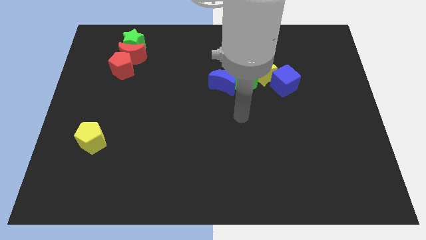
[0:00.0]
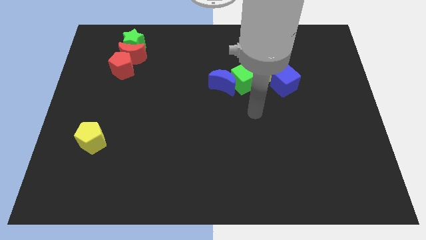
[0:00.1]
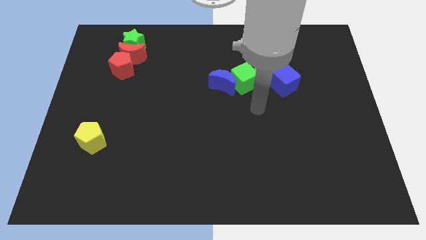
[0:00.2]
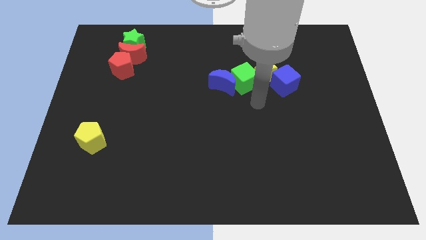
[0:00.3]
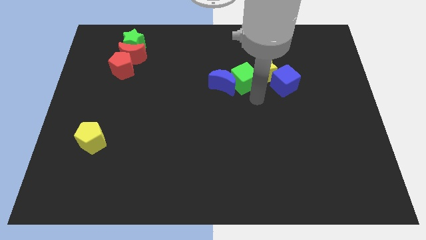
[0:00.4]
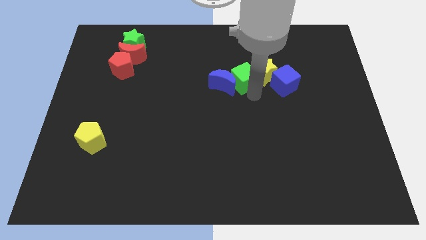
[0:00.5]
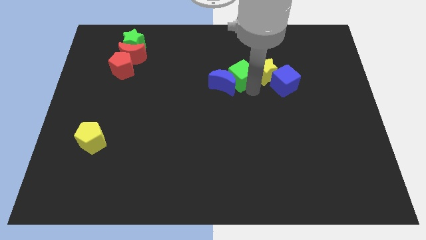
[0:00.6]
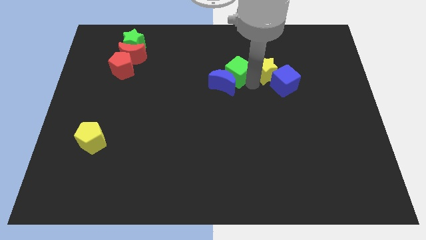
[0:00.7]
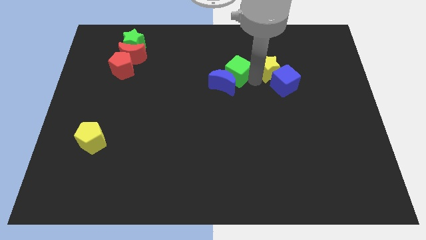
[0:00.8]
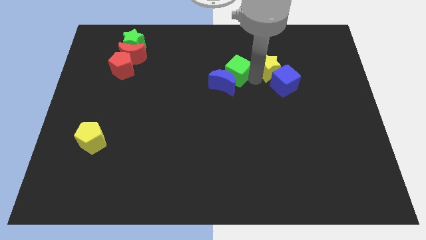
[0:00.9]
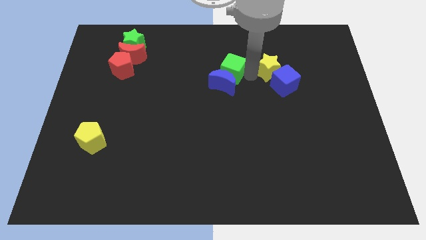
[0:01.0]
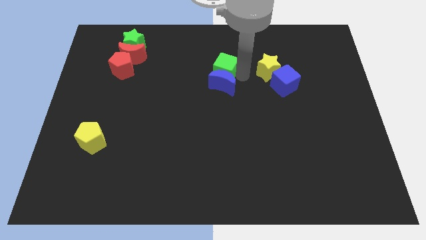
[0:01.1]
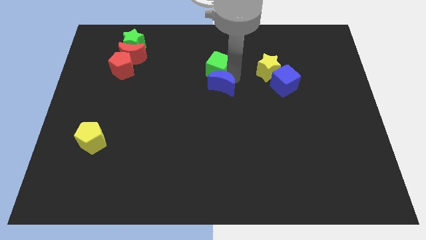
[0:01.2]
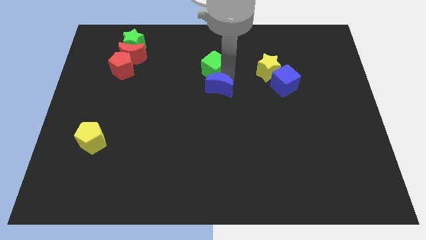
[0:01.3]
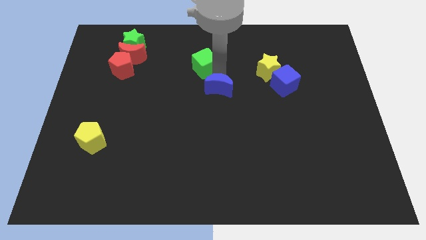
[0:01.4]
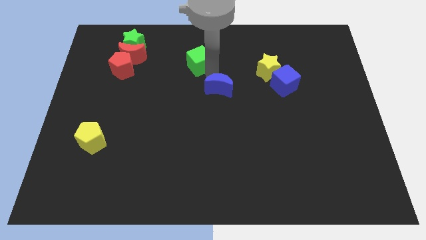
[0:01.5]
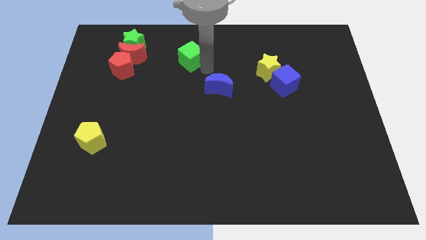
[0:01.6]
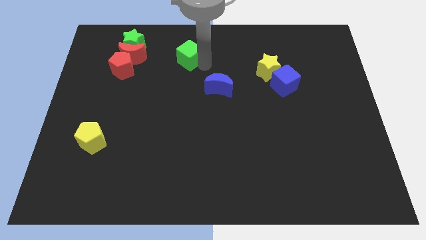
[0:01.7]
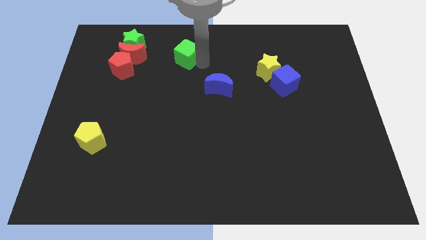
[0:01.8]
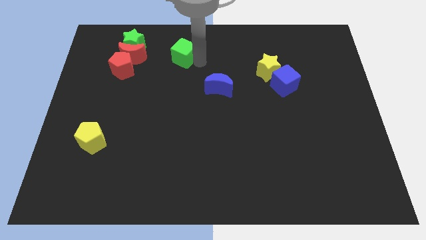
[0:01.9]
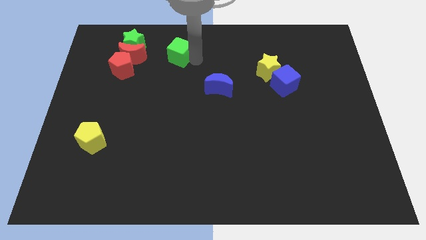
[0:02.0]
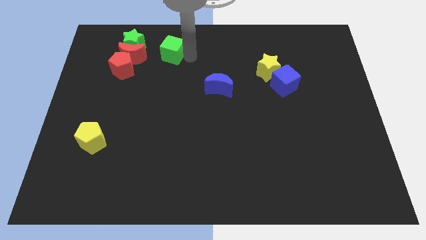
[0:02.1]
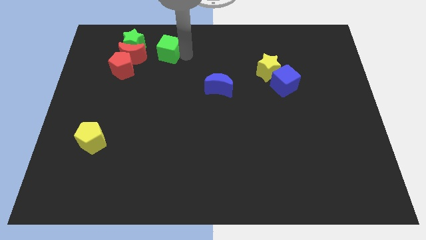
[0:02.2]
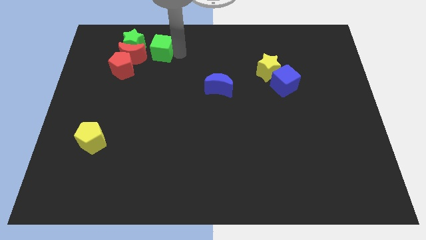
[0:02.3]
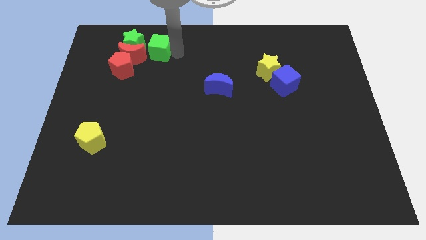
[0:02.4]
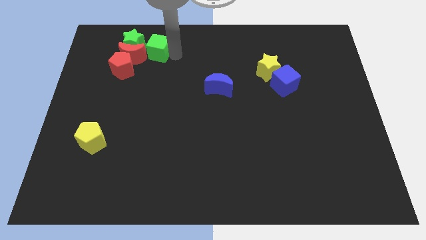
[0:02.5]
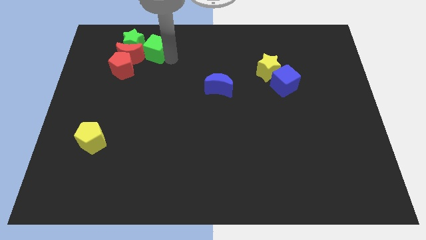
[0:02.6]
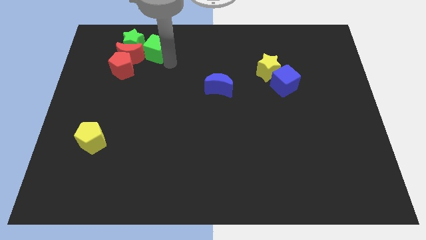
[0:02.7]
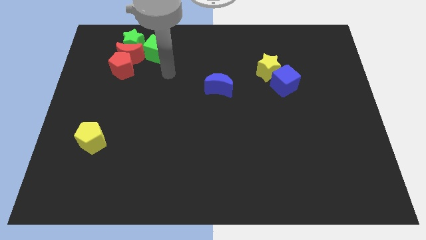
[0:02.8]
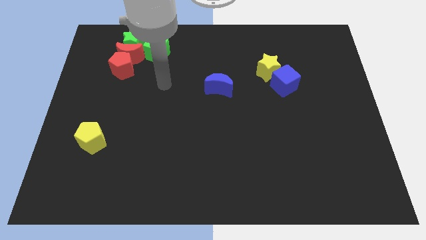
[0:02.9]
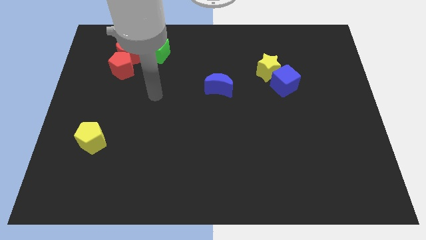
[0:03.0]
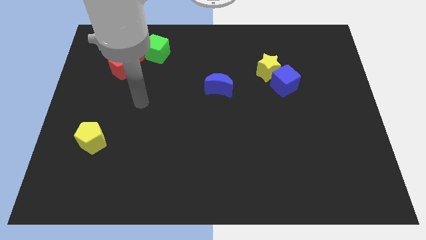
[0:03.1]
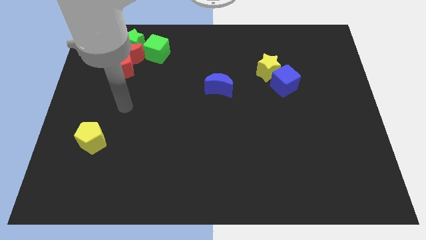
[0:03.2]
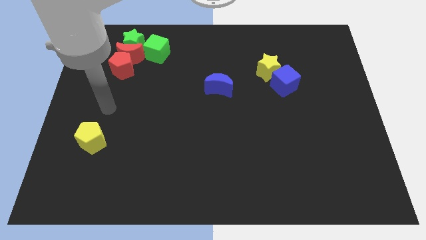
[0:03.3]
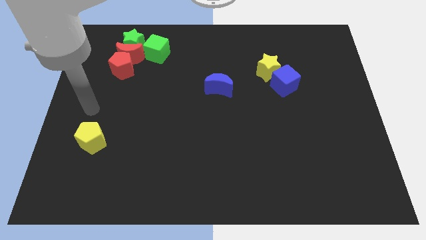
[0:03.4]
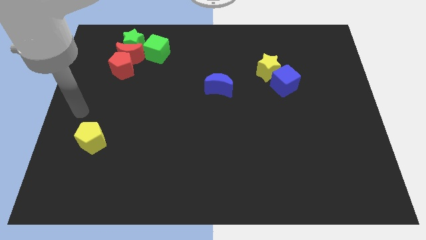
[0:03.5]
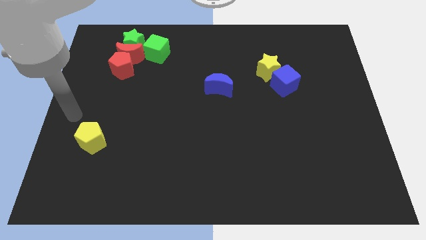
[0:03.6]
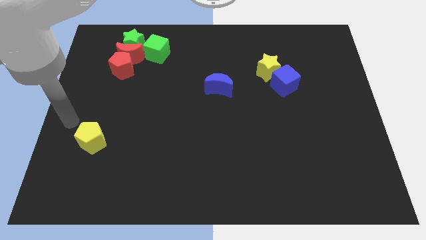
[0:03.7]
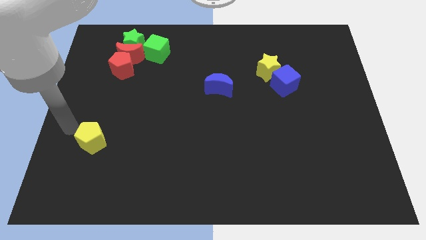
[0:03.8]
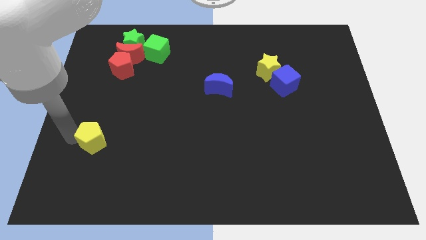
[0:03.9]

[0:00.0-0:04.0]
place the arm left to the yellow pentagon

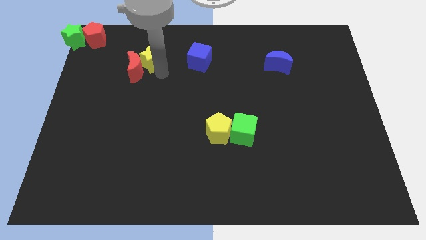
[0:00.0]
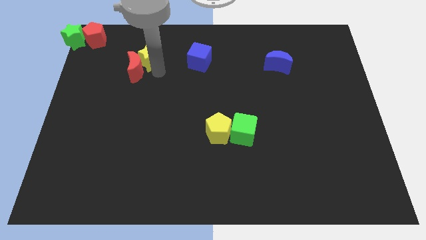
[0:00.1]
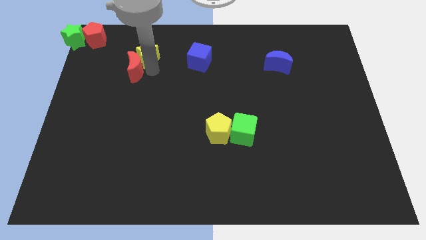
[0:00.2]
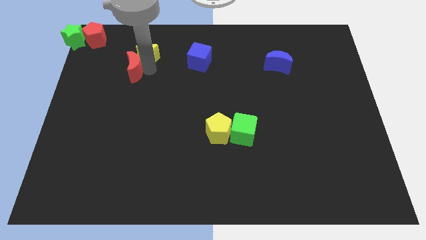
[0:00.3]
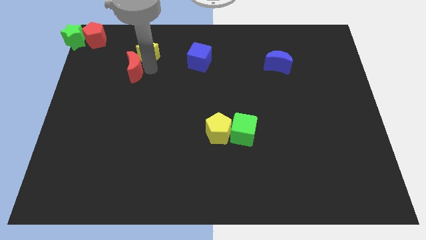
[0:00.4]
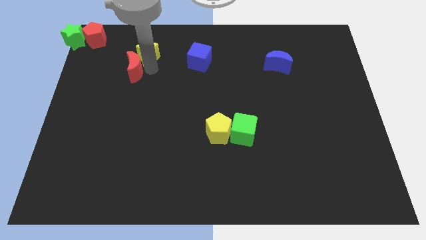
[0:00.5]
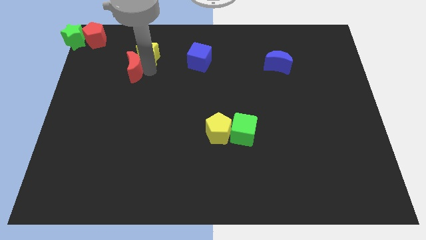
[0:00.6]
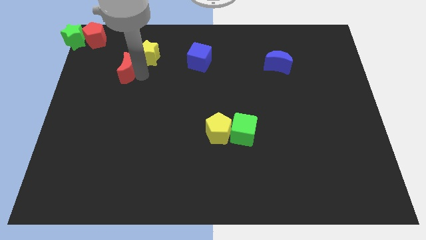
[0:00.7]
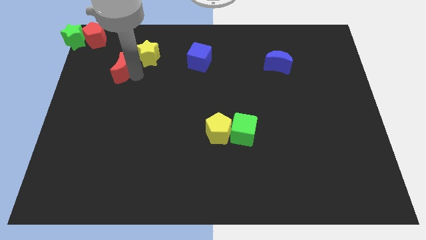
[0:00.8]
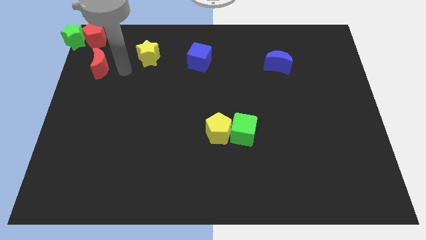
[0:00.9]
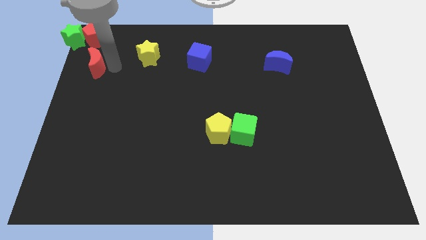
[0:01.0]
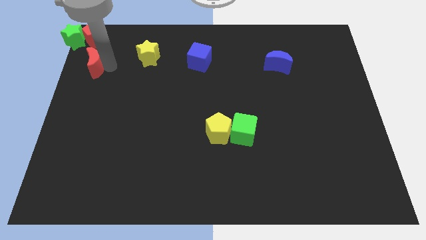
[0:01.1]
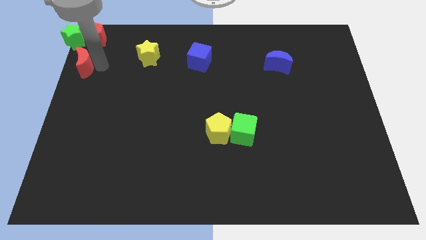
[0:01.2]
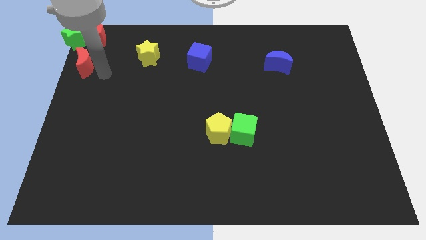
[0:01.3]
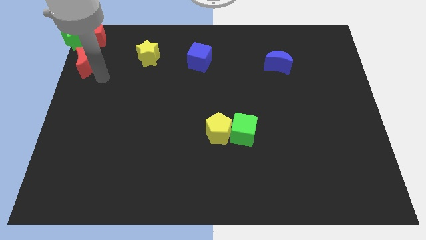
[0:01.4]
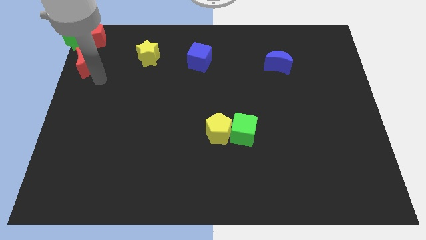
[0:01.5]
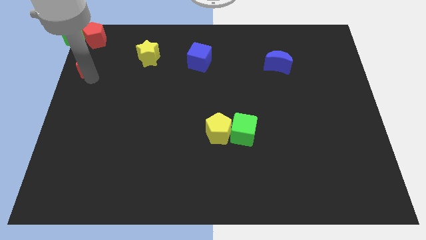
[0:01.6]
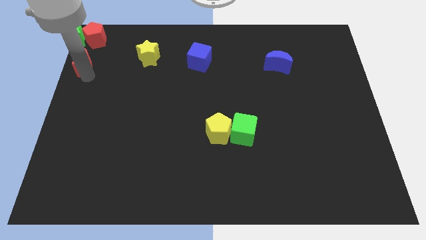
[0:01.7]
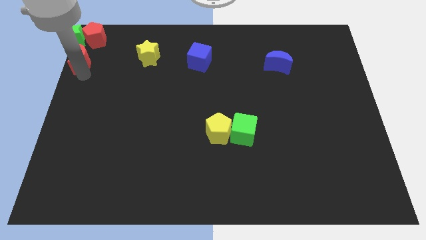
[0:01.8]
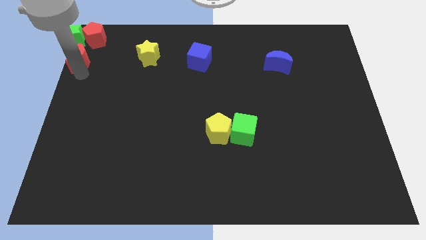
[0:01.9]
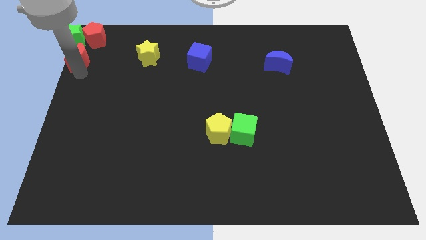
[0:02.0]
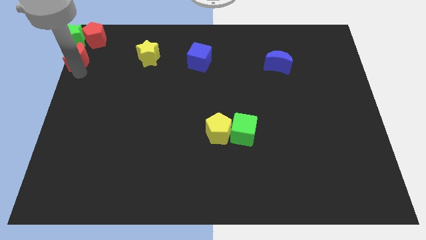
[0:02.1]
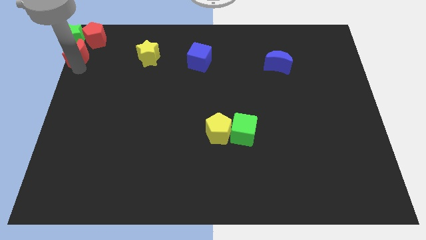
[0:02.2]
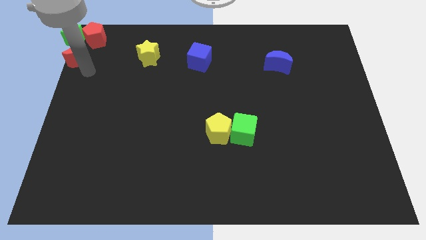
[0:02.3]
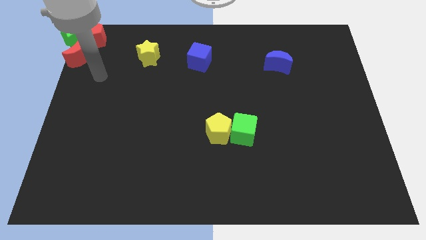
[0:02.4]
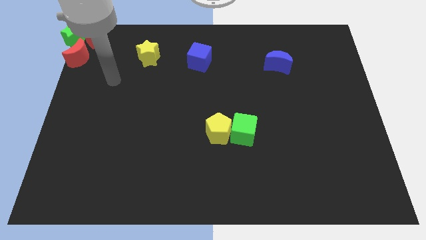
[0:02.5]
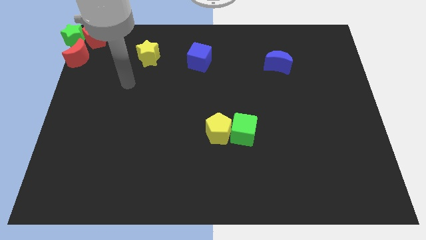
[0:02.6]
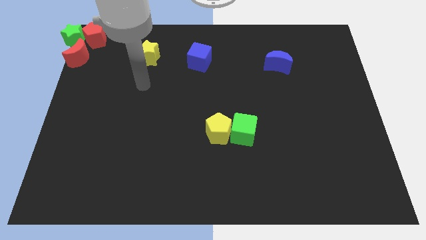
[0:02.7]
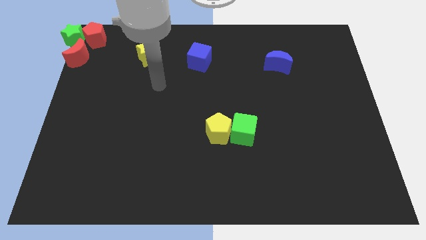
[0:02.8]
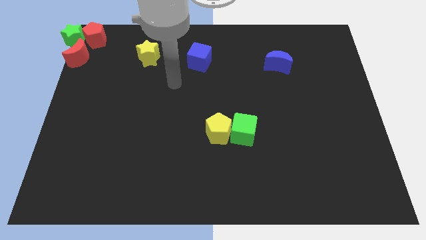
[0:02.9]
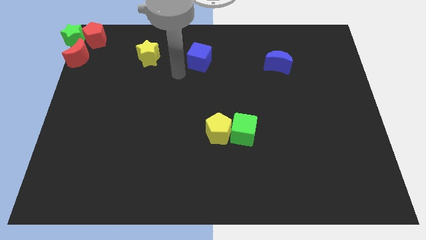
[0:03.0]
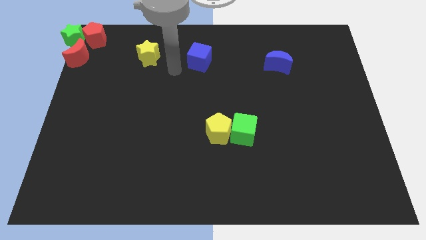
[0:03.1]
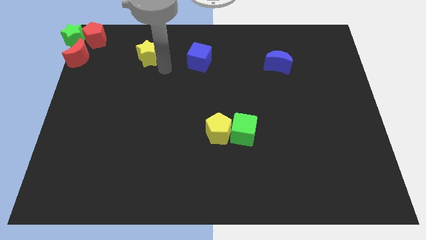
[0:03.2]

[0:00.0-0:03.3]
move the red crescent to the bottom of the green star

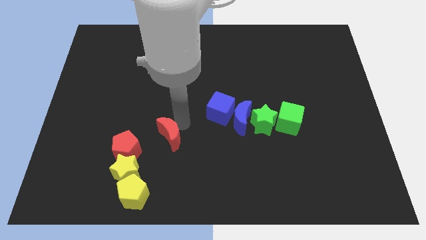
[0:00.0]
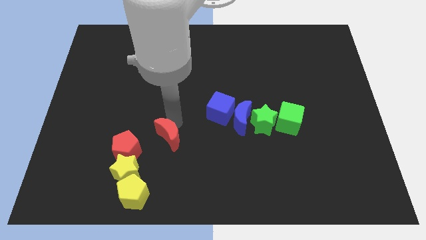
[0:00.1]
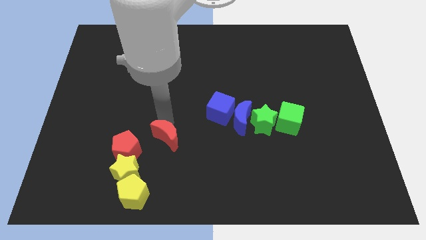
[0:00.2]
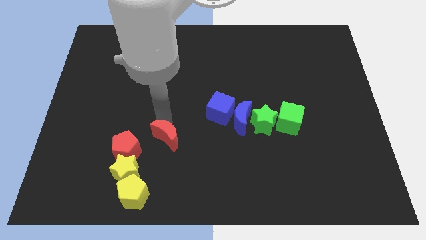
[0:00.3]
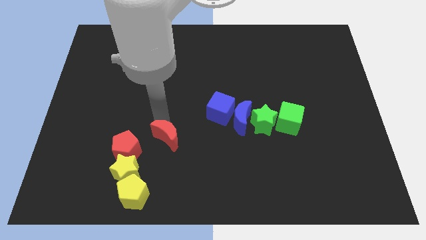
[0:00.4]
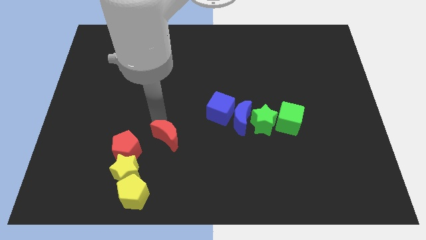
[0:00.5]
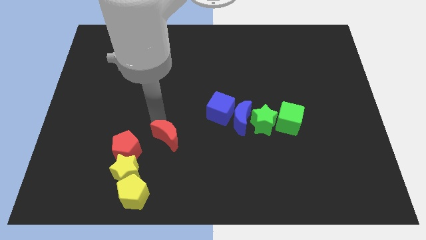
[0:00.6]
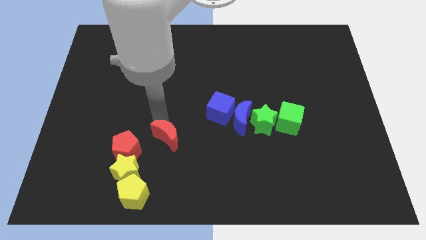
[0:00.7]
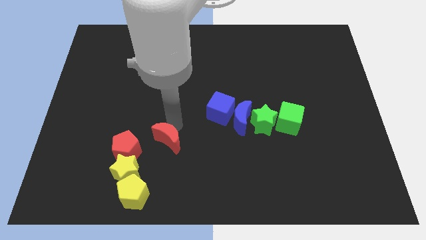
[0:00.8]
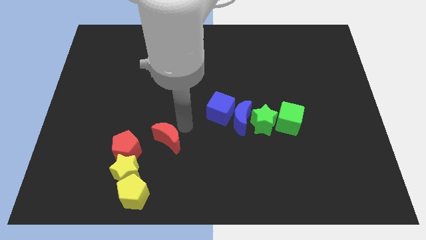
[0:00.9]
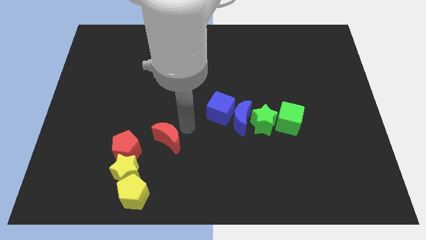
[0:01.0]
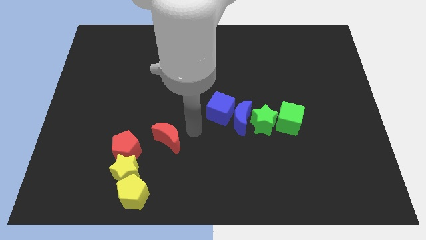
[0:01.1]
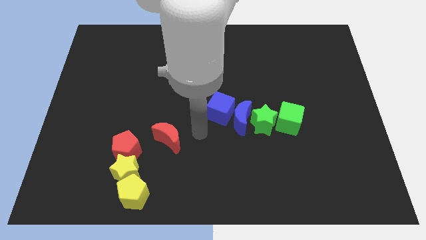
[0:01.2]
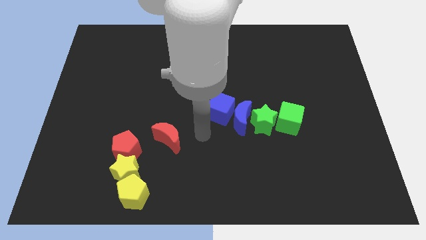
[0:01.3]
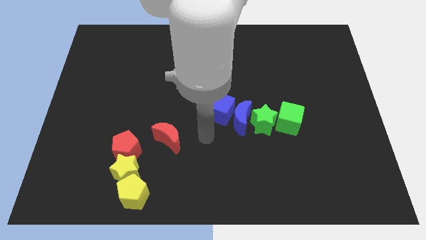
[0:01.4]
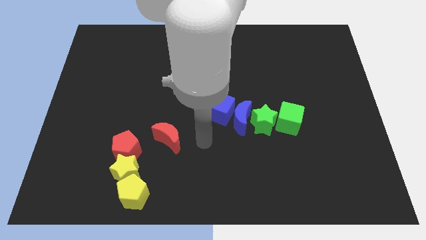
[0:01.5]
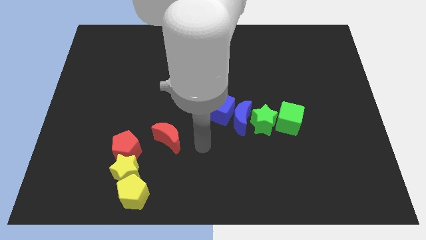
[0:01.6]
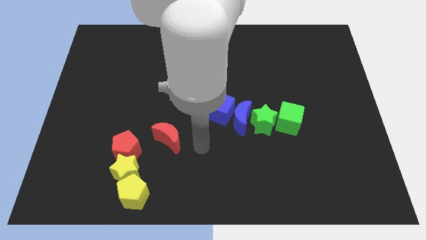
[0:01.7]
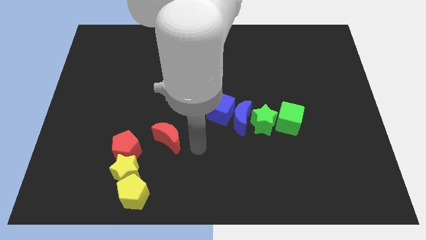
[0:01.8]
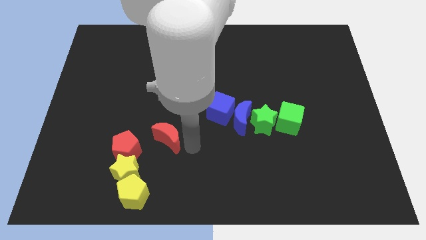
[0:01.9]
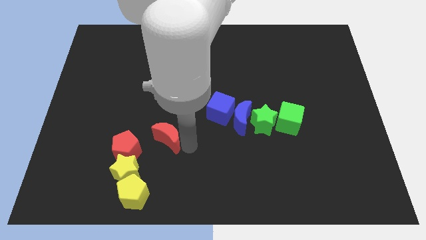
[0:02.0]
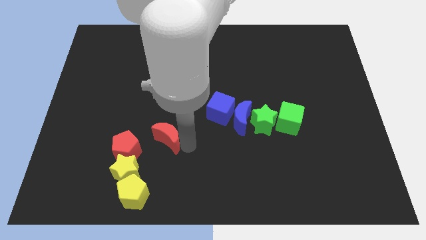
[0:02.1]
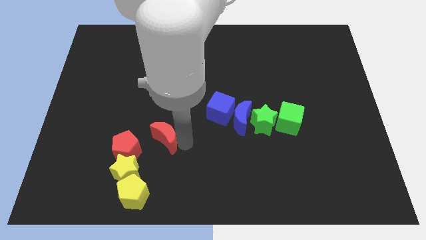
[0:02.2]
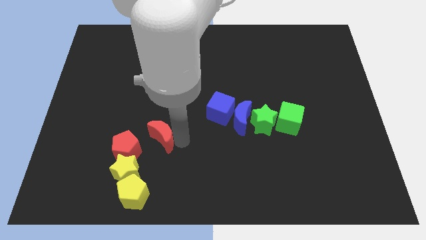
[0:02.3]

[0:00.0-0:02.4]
move the red crescent close to the red pentagon
